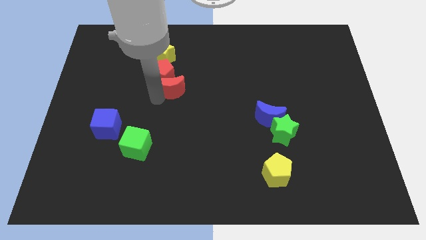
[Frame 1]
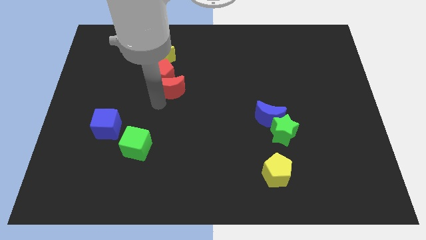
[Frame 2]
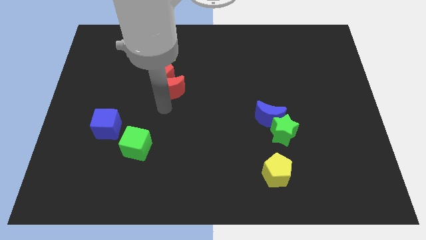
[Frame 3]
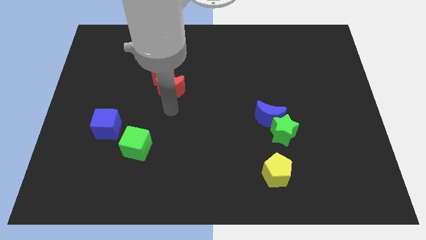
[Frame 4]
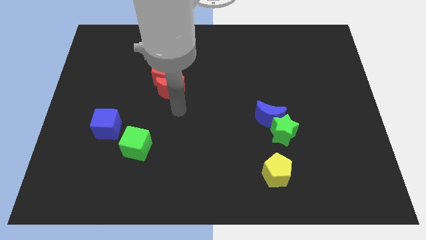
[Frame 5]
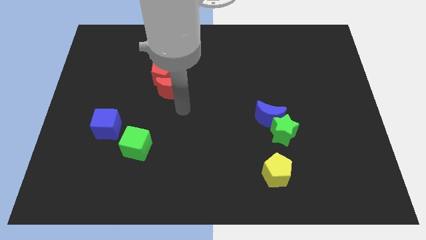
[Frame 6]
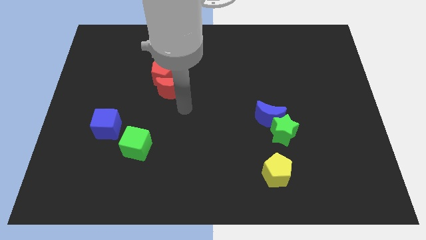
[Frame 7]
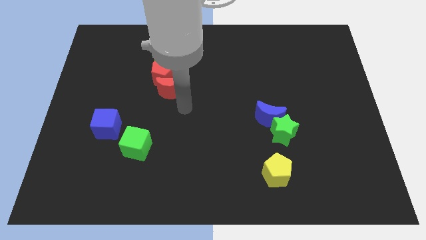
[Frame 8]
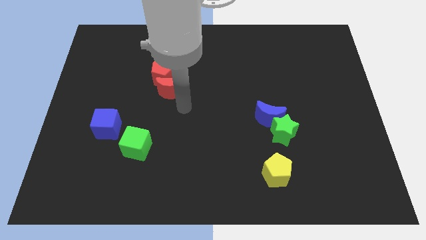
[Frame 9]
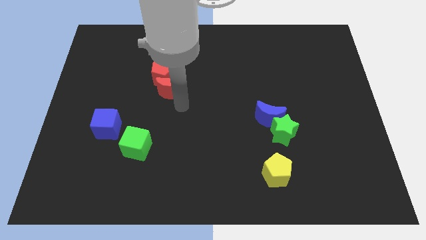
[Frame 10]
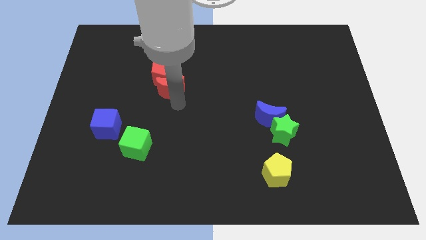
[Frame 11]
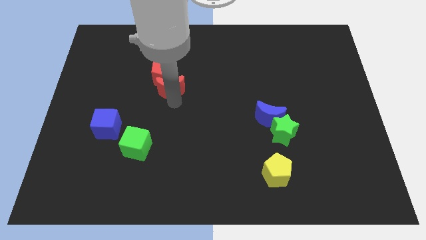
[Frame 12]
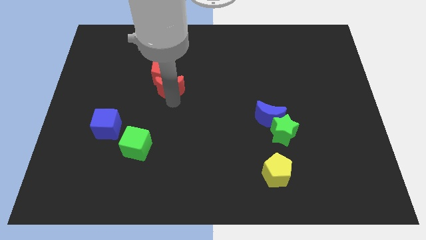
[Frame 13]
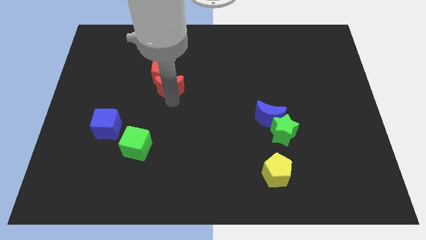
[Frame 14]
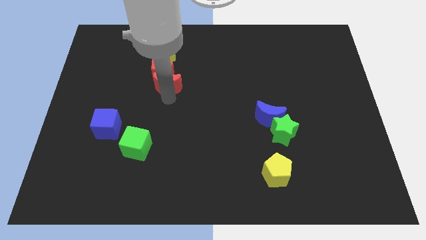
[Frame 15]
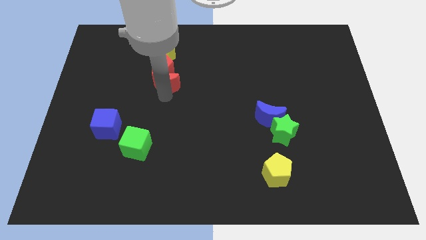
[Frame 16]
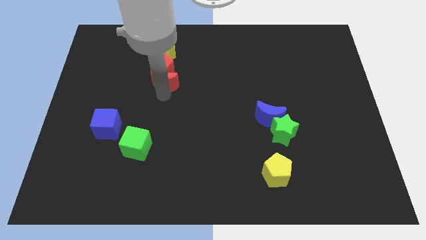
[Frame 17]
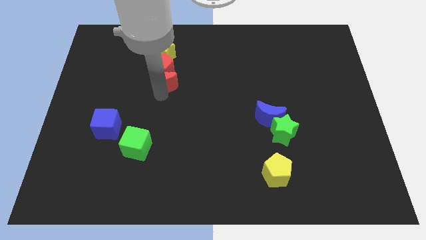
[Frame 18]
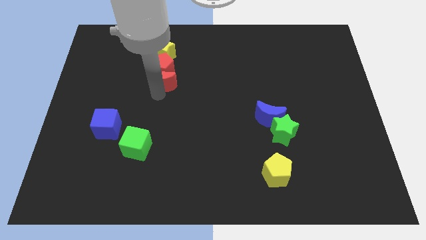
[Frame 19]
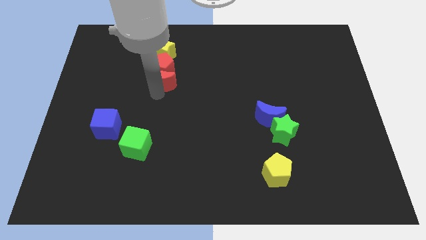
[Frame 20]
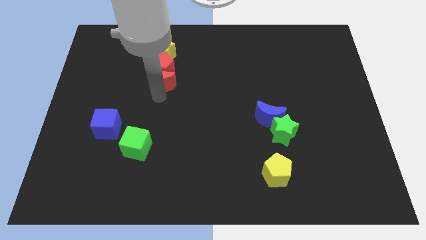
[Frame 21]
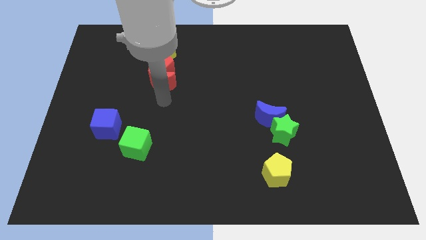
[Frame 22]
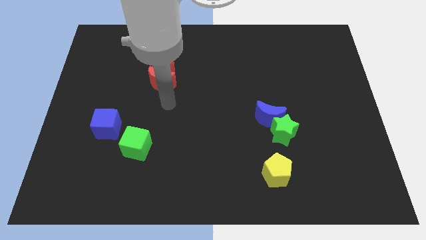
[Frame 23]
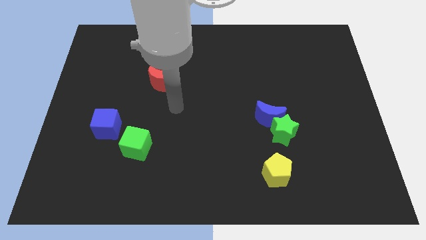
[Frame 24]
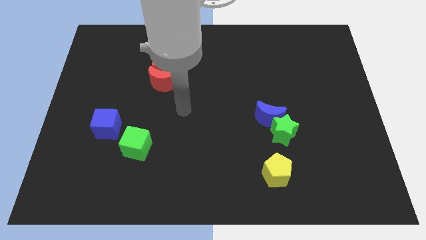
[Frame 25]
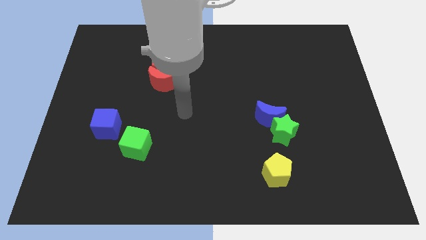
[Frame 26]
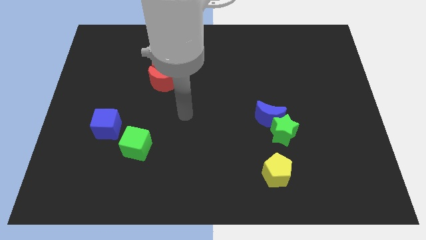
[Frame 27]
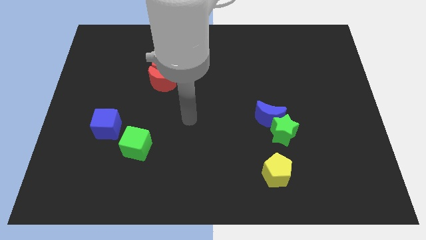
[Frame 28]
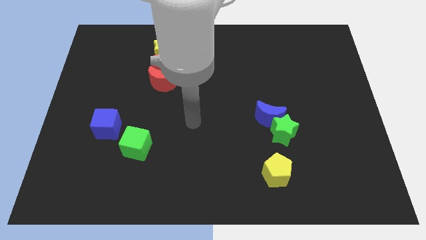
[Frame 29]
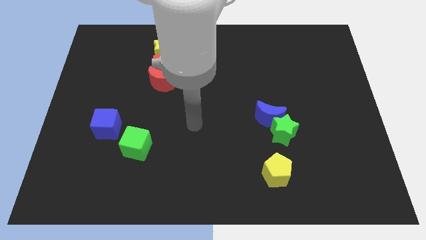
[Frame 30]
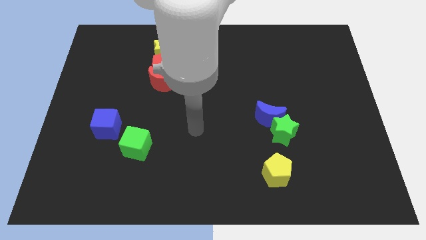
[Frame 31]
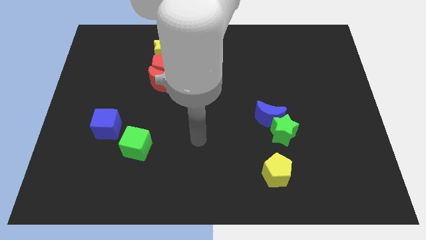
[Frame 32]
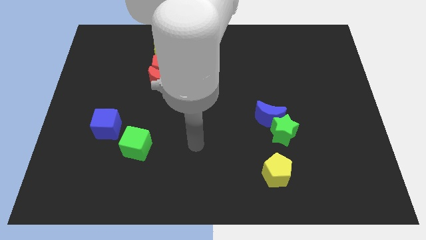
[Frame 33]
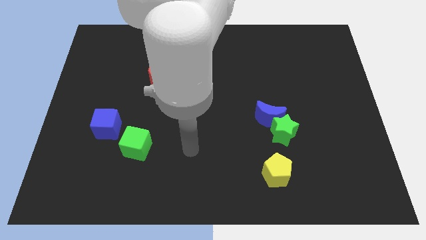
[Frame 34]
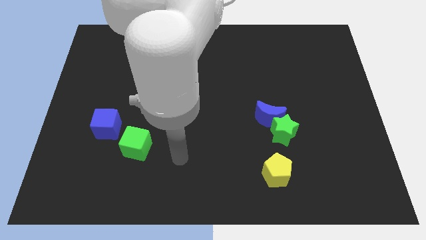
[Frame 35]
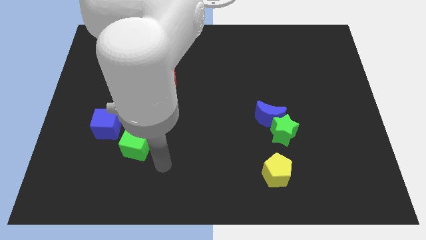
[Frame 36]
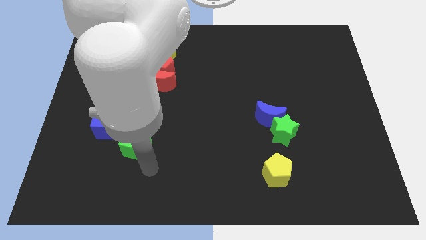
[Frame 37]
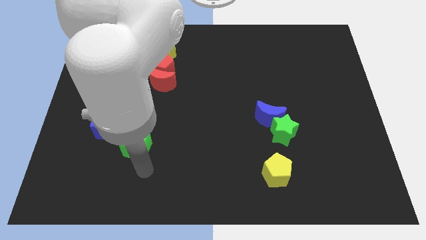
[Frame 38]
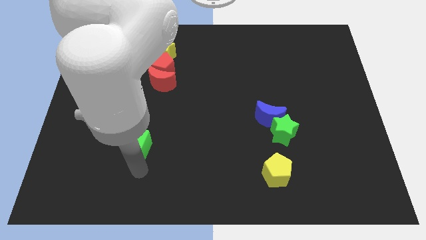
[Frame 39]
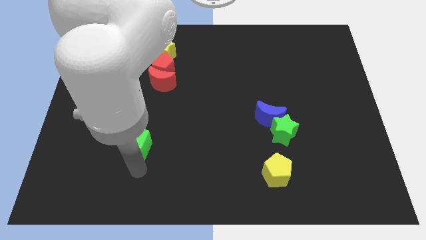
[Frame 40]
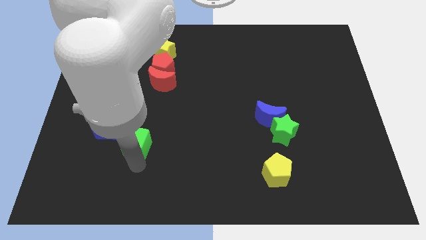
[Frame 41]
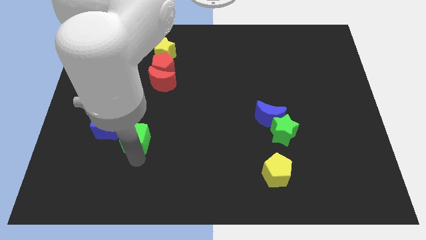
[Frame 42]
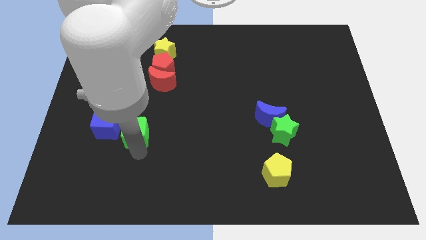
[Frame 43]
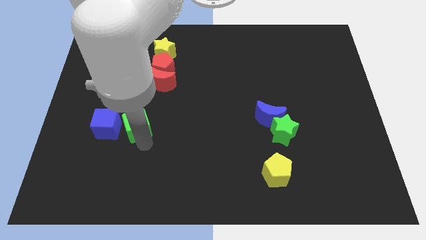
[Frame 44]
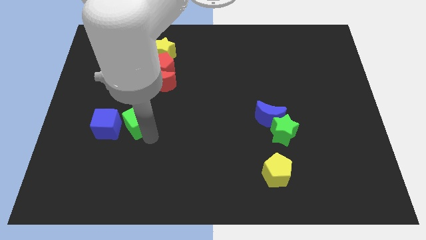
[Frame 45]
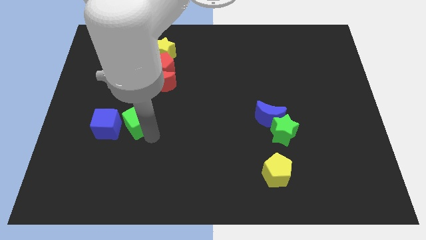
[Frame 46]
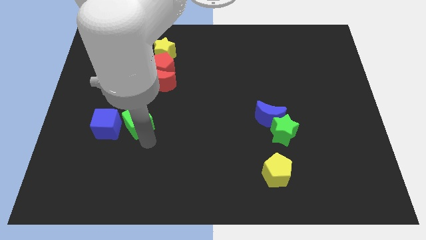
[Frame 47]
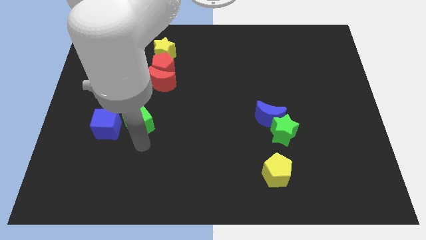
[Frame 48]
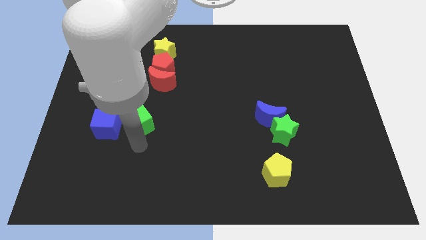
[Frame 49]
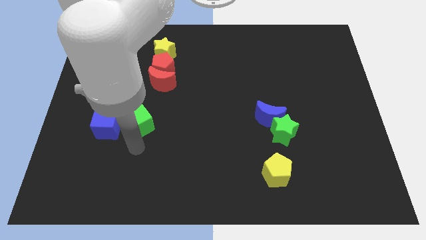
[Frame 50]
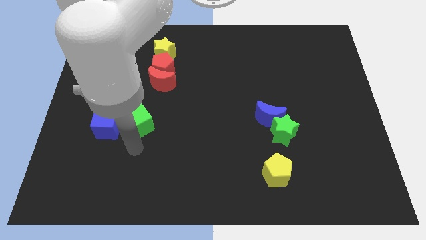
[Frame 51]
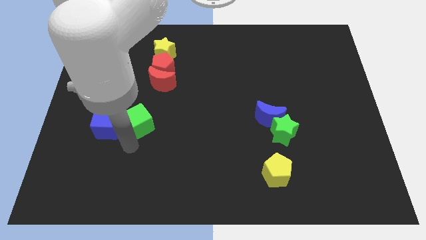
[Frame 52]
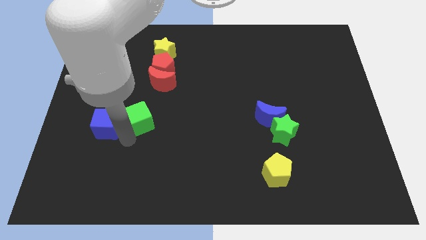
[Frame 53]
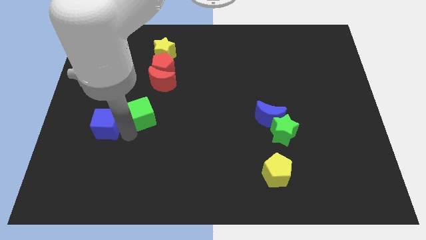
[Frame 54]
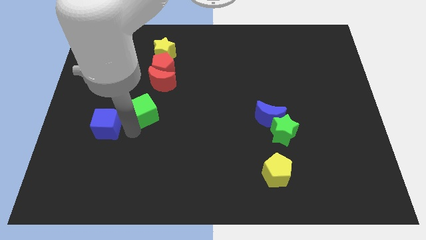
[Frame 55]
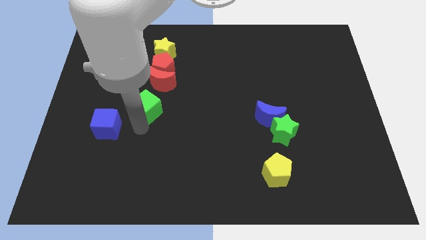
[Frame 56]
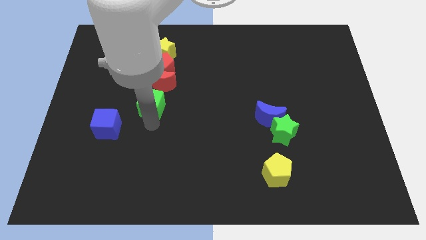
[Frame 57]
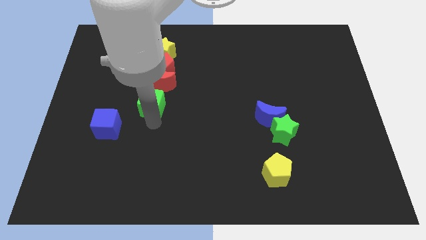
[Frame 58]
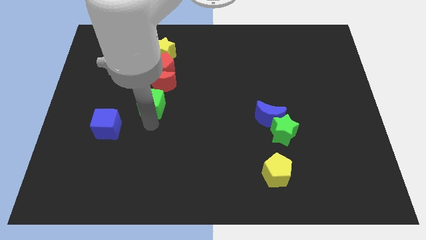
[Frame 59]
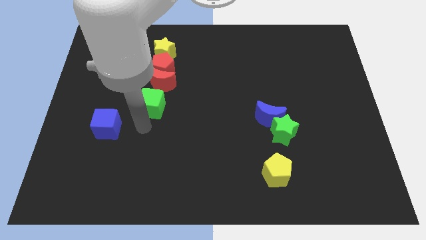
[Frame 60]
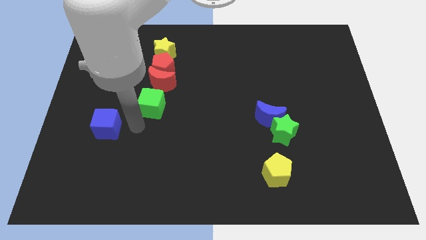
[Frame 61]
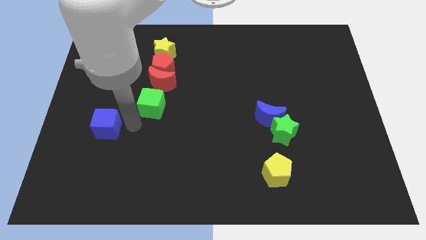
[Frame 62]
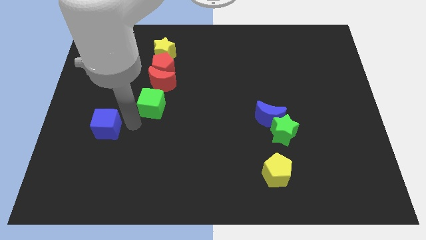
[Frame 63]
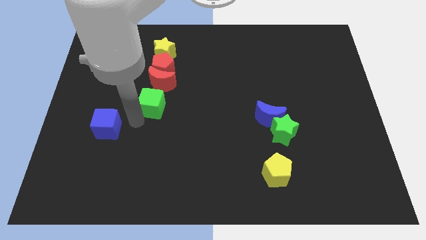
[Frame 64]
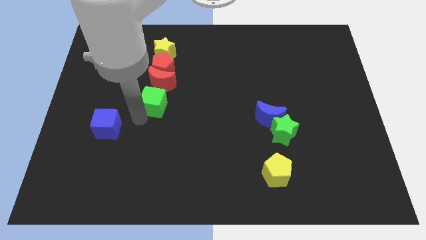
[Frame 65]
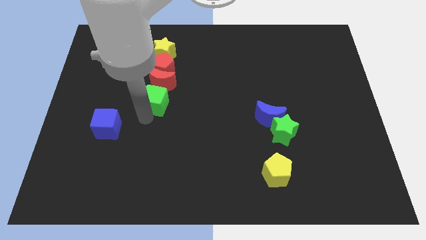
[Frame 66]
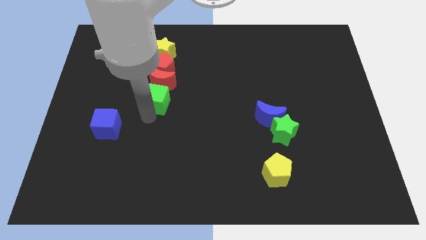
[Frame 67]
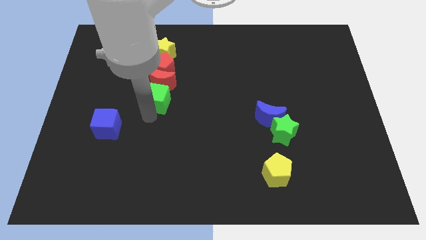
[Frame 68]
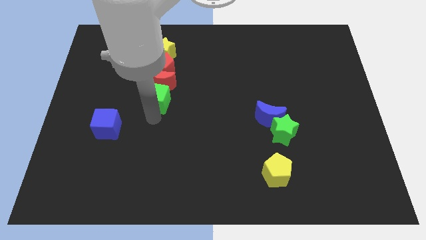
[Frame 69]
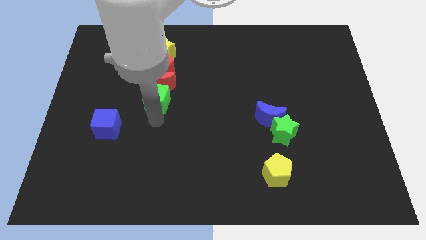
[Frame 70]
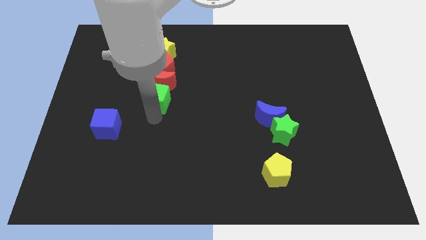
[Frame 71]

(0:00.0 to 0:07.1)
slide the green cube to the bottom of the red moon

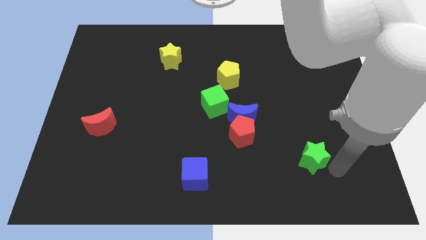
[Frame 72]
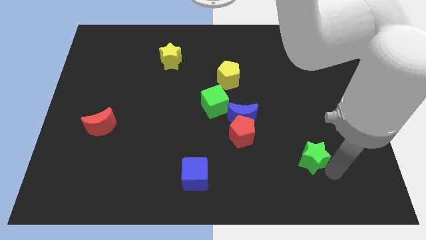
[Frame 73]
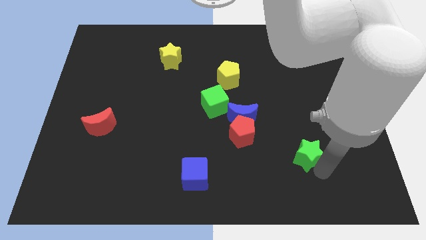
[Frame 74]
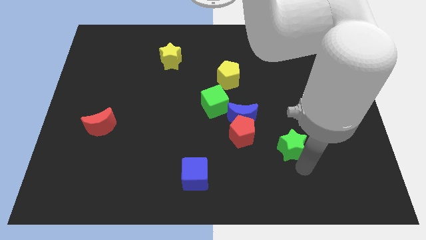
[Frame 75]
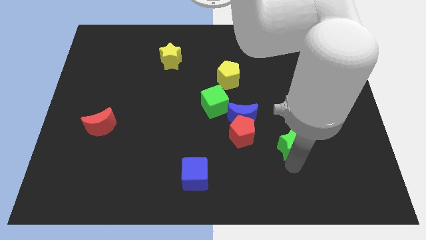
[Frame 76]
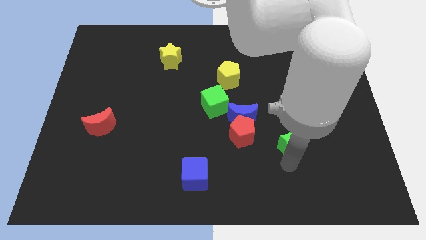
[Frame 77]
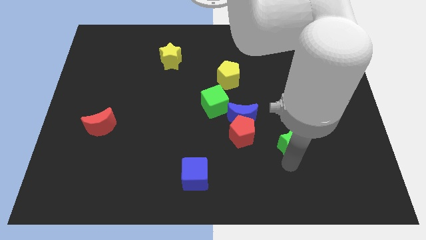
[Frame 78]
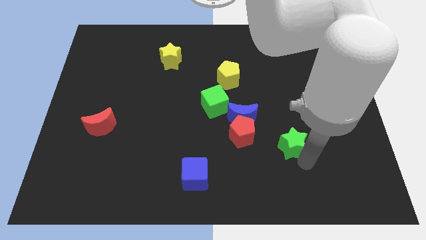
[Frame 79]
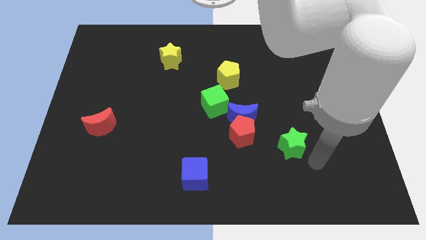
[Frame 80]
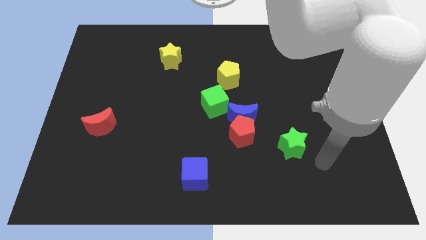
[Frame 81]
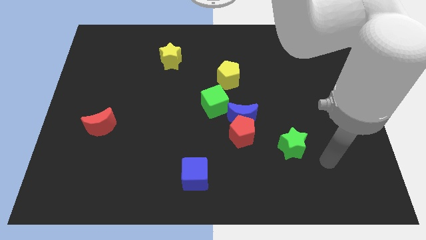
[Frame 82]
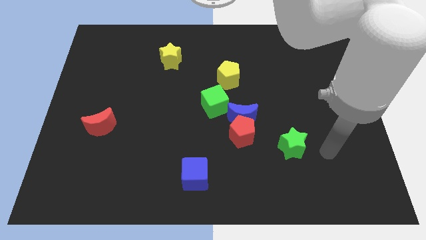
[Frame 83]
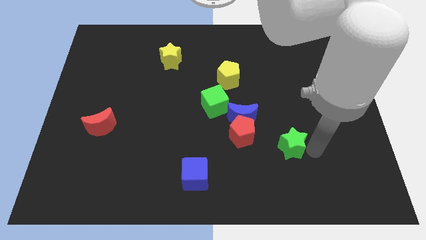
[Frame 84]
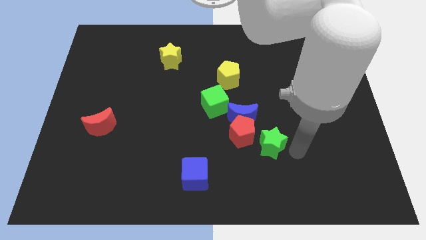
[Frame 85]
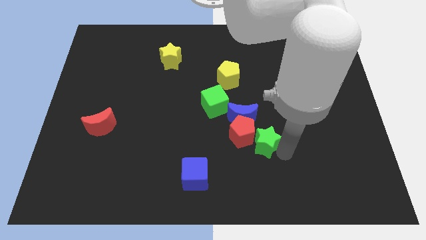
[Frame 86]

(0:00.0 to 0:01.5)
move the green star into the red pentagon

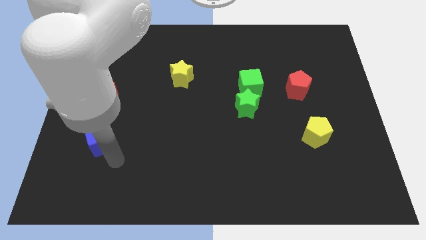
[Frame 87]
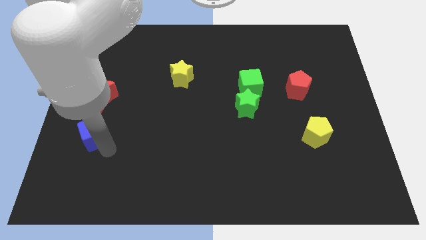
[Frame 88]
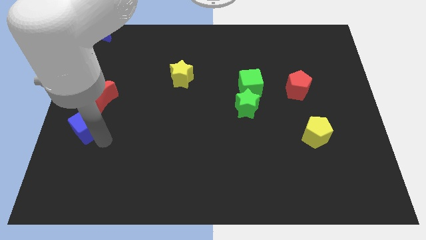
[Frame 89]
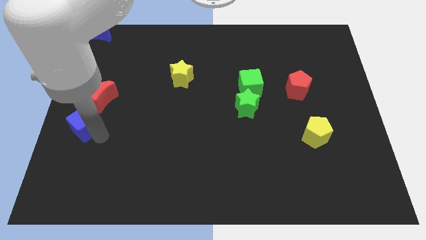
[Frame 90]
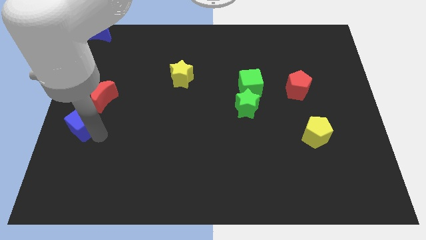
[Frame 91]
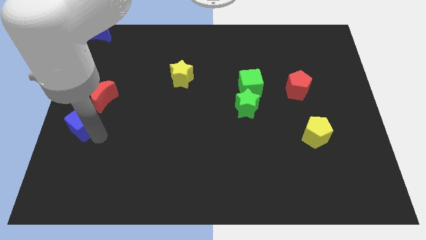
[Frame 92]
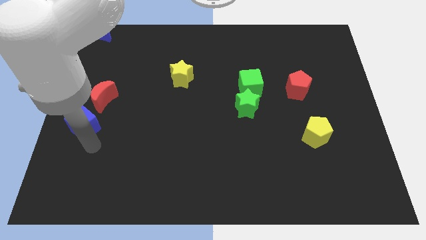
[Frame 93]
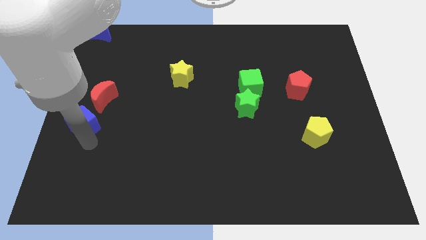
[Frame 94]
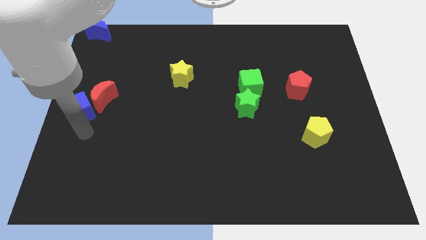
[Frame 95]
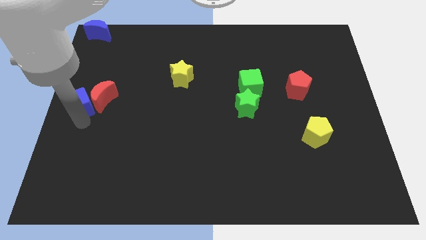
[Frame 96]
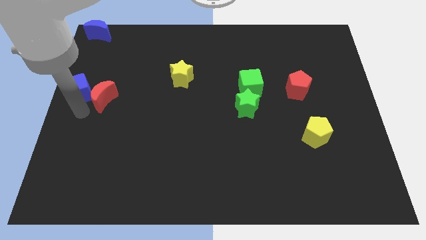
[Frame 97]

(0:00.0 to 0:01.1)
move the blue cube to the left of the red crescent
